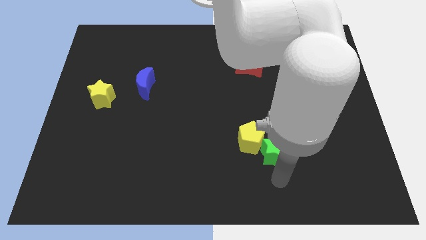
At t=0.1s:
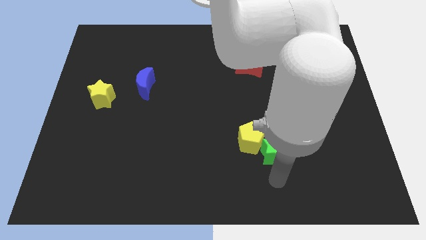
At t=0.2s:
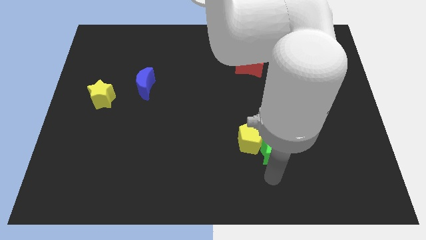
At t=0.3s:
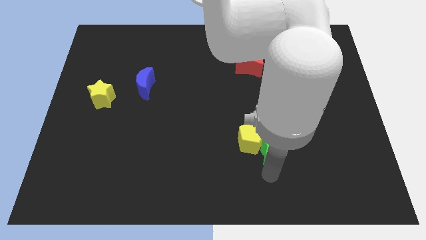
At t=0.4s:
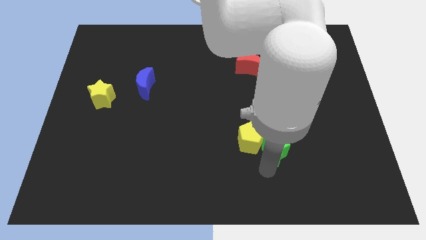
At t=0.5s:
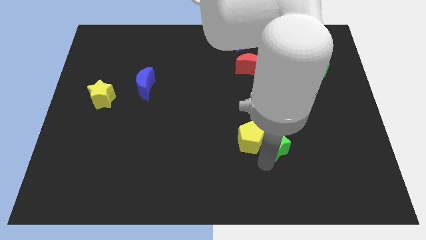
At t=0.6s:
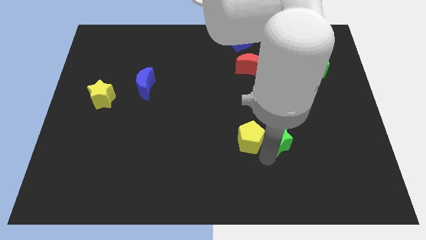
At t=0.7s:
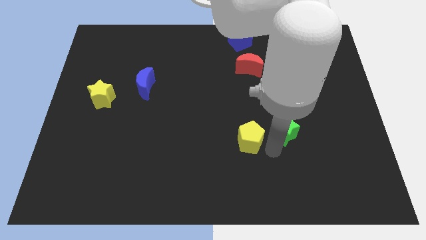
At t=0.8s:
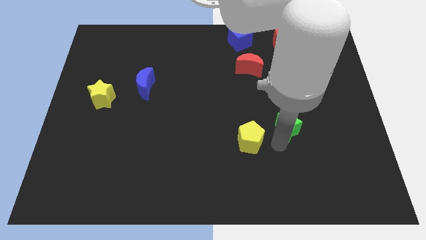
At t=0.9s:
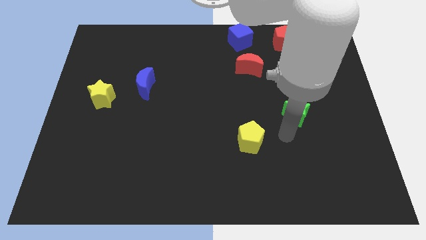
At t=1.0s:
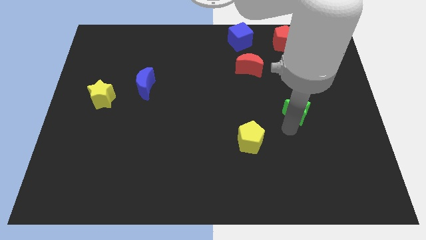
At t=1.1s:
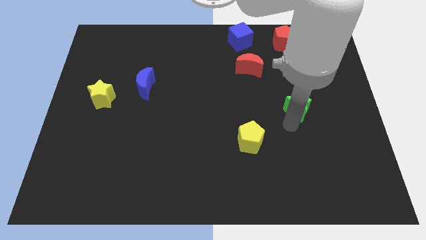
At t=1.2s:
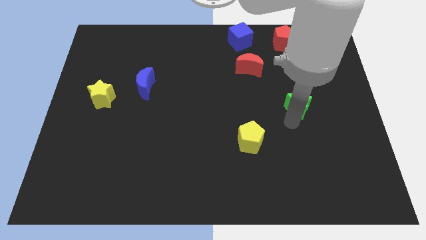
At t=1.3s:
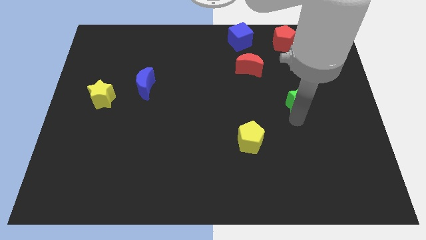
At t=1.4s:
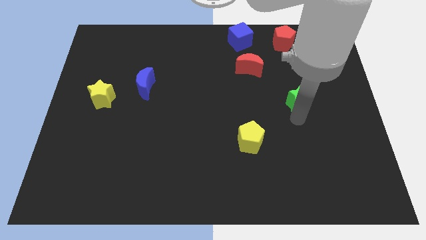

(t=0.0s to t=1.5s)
separate the green star from yellow pentagon

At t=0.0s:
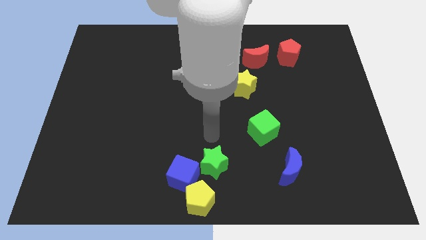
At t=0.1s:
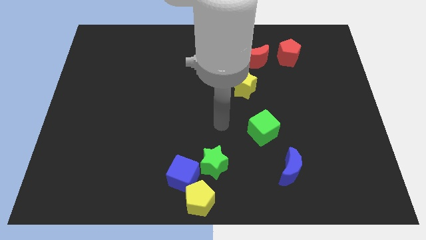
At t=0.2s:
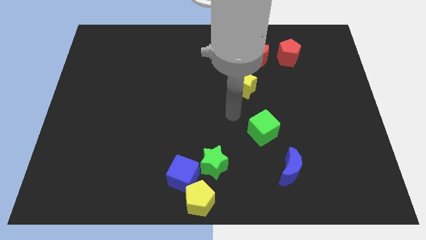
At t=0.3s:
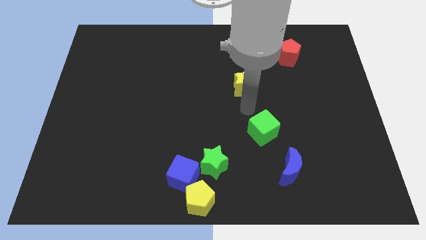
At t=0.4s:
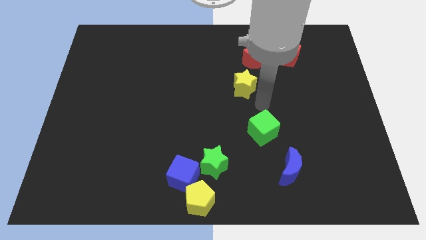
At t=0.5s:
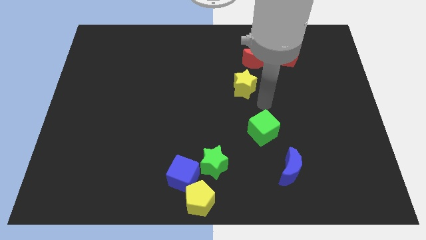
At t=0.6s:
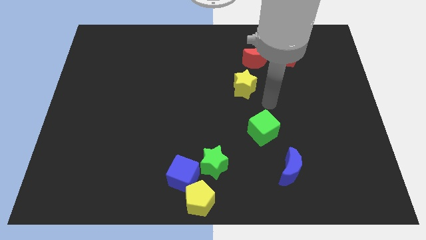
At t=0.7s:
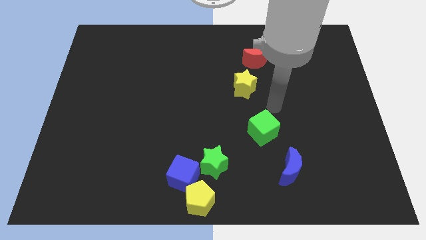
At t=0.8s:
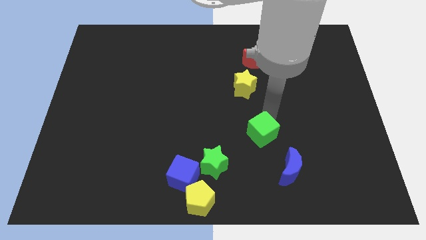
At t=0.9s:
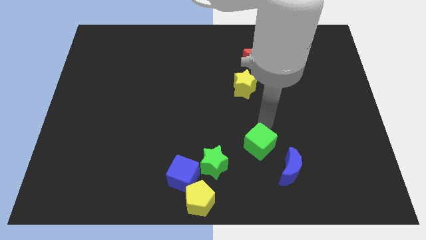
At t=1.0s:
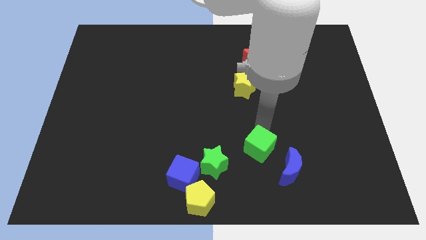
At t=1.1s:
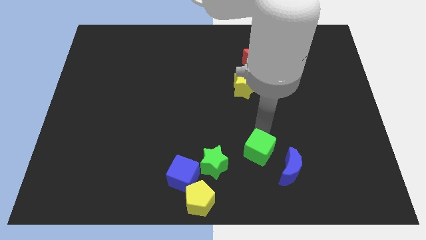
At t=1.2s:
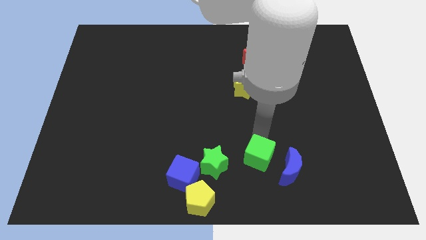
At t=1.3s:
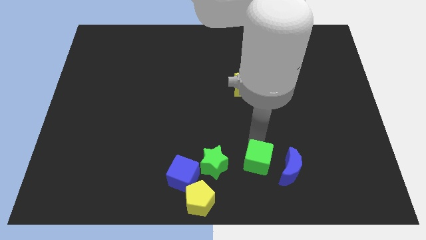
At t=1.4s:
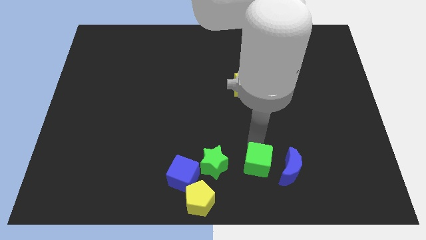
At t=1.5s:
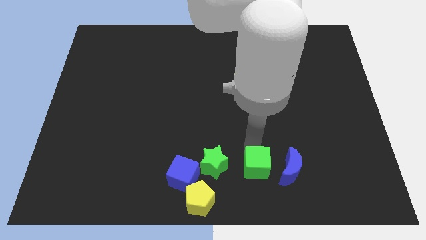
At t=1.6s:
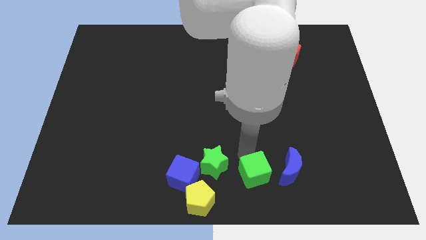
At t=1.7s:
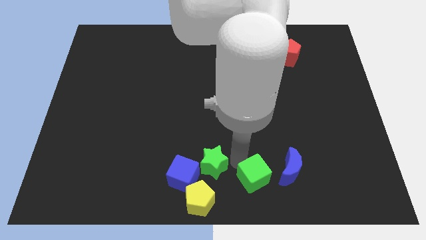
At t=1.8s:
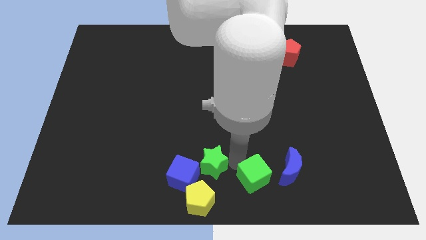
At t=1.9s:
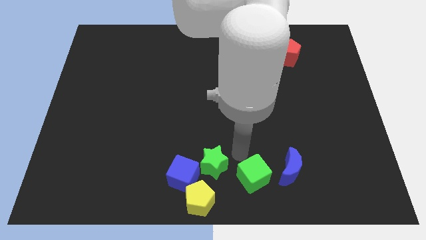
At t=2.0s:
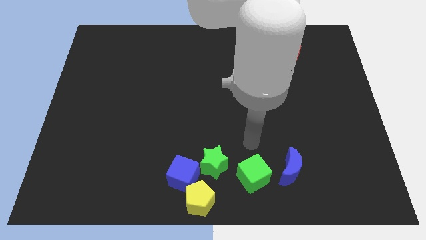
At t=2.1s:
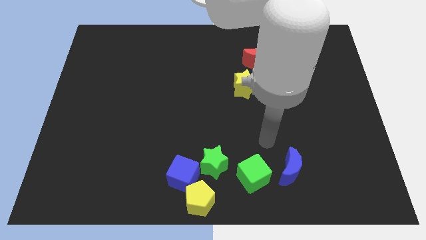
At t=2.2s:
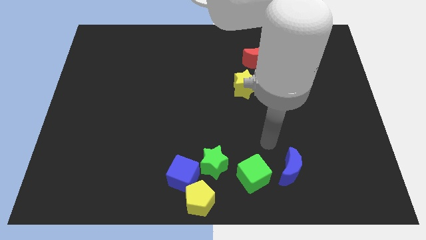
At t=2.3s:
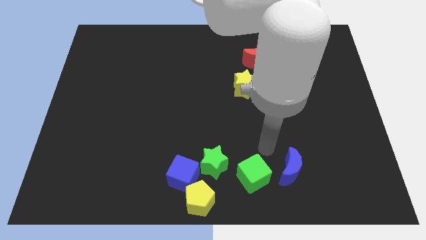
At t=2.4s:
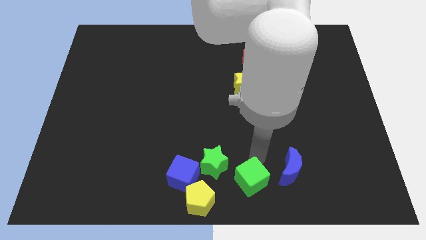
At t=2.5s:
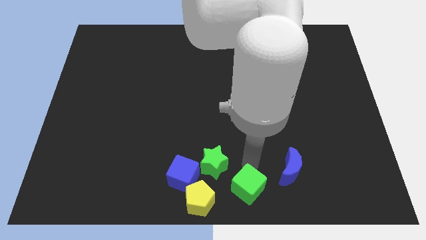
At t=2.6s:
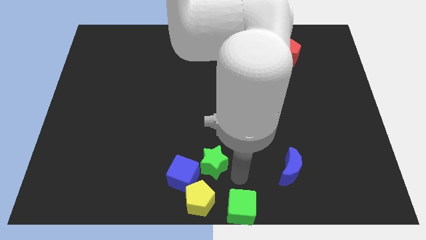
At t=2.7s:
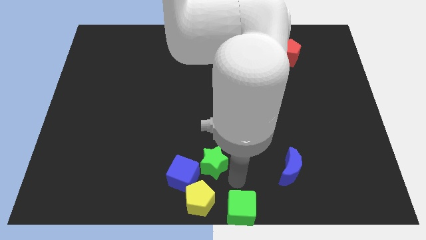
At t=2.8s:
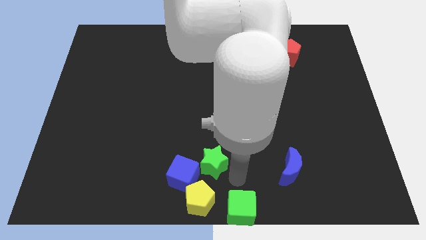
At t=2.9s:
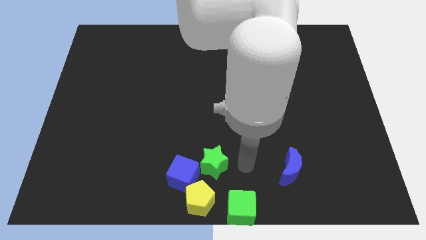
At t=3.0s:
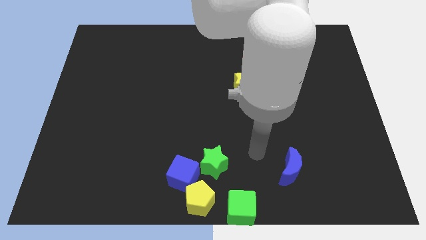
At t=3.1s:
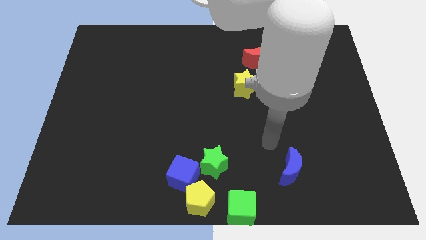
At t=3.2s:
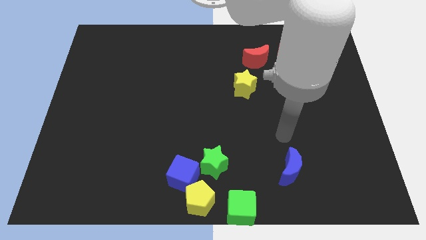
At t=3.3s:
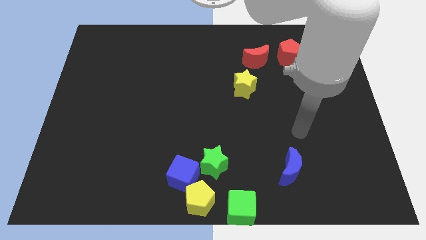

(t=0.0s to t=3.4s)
place the green cube right to the yellow pentagon

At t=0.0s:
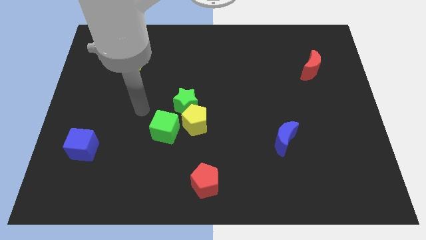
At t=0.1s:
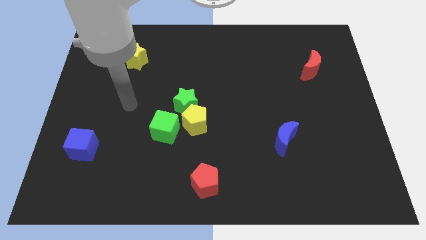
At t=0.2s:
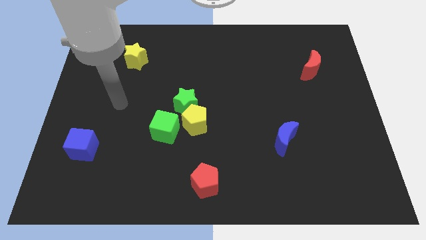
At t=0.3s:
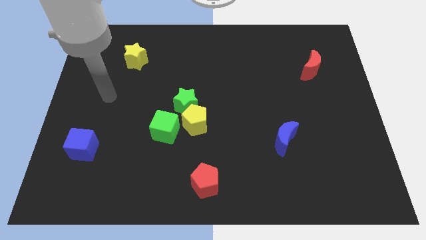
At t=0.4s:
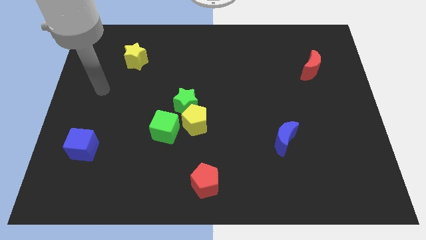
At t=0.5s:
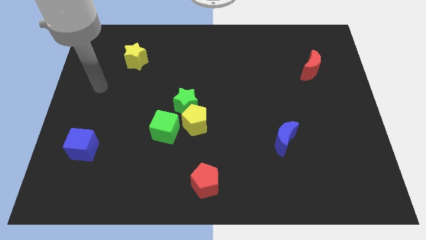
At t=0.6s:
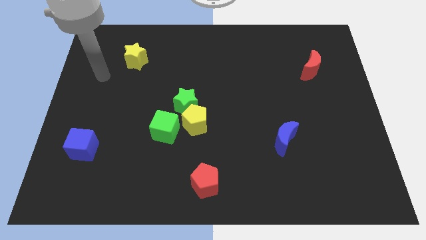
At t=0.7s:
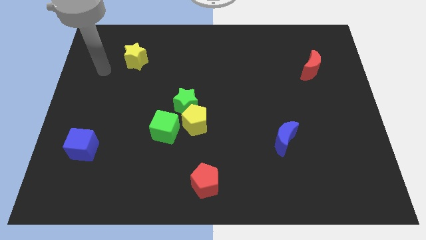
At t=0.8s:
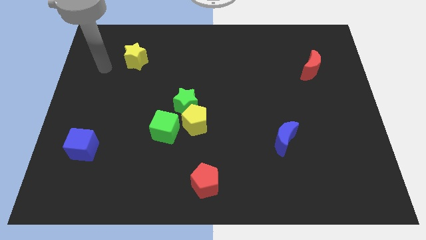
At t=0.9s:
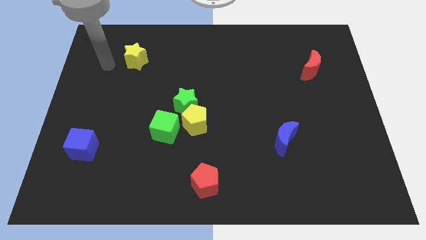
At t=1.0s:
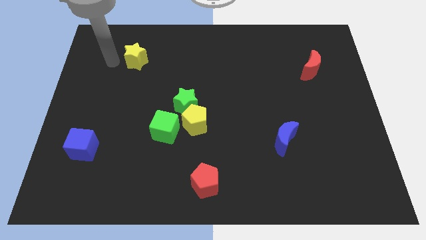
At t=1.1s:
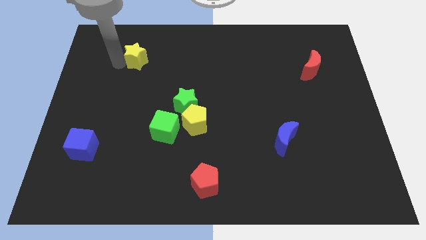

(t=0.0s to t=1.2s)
move arm to the left of yellow star

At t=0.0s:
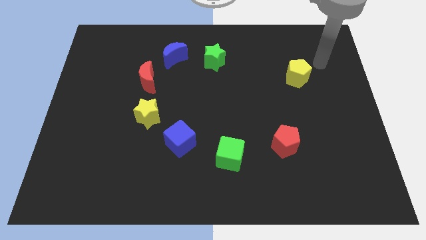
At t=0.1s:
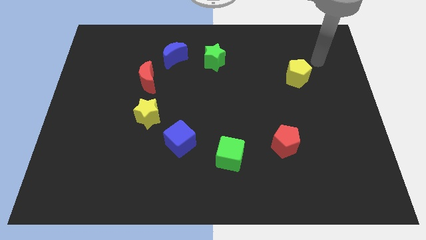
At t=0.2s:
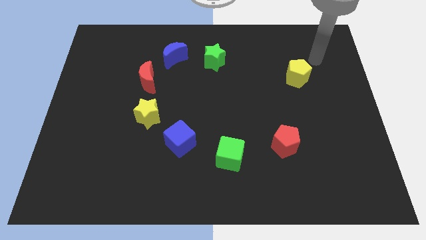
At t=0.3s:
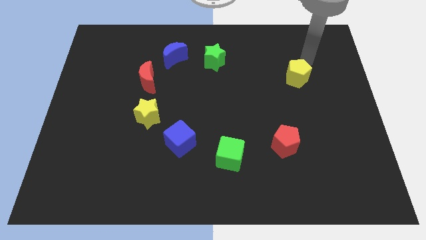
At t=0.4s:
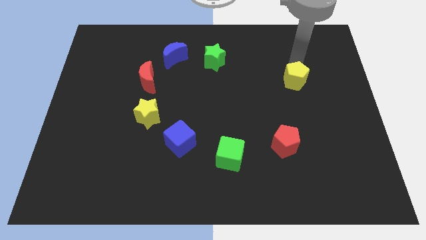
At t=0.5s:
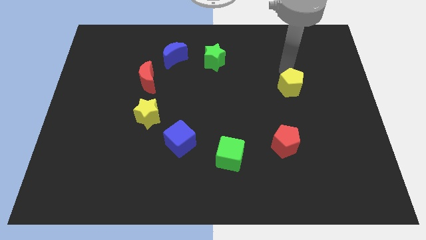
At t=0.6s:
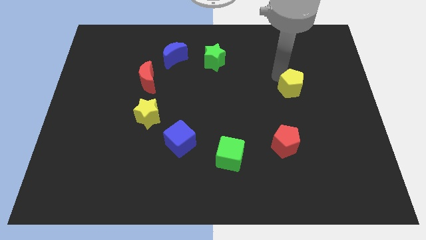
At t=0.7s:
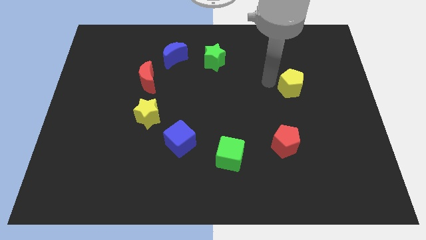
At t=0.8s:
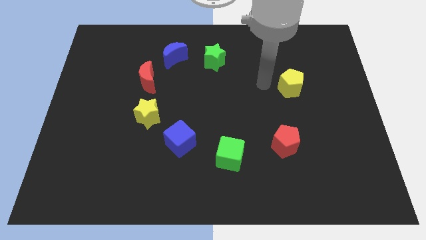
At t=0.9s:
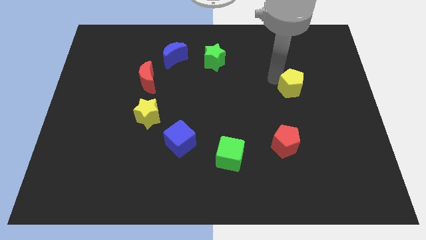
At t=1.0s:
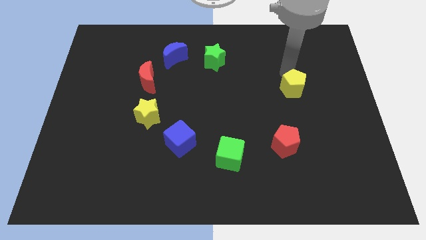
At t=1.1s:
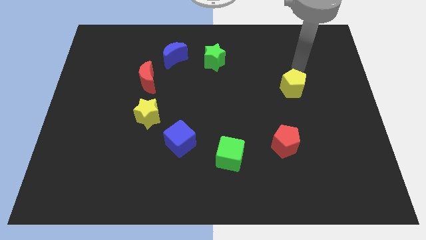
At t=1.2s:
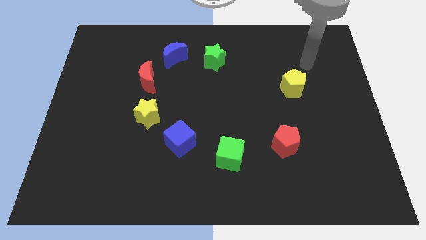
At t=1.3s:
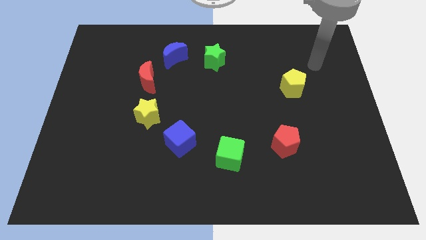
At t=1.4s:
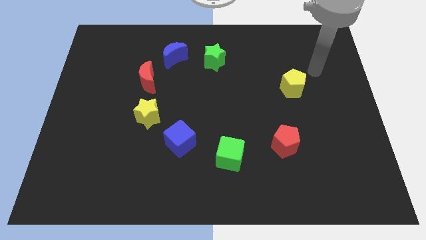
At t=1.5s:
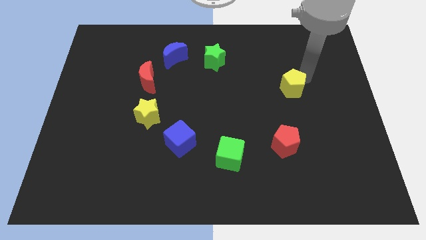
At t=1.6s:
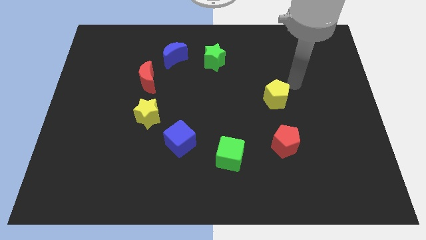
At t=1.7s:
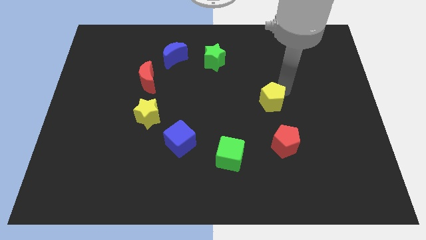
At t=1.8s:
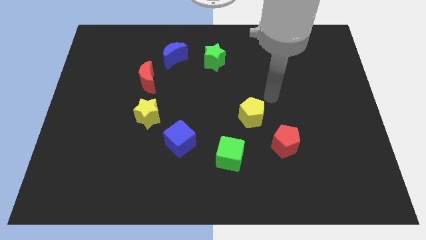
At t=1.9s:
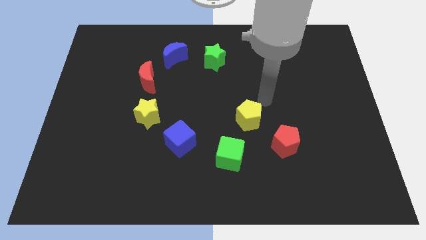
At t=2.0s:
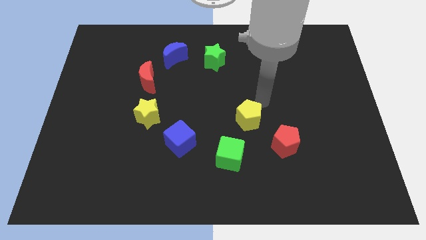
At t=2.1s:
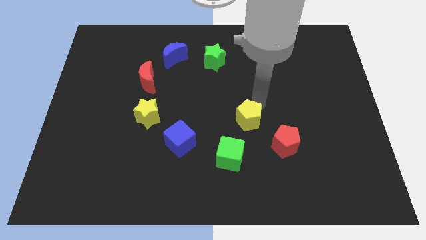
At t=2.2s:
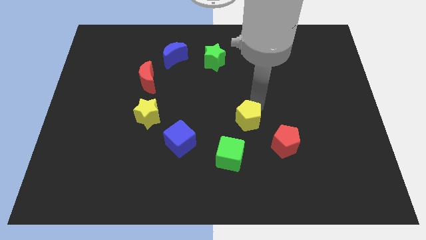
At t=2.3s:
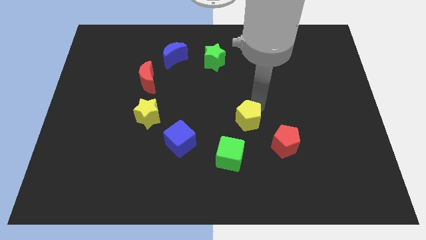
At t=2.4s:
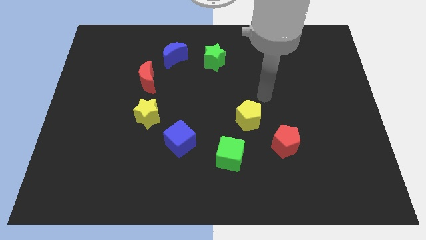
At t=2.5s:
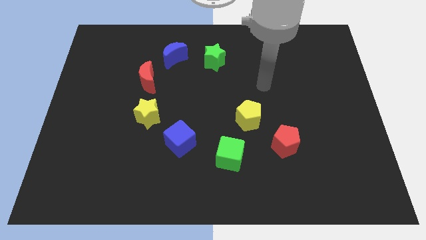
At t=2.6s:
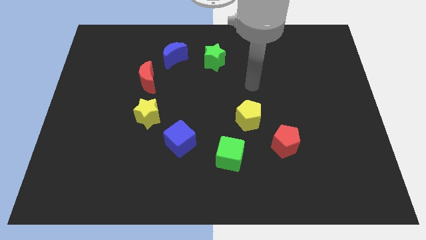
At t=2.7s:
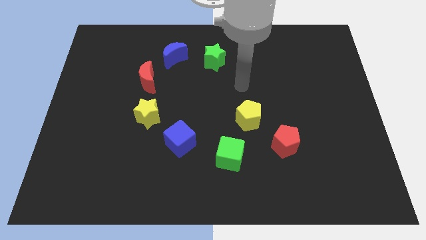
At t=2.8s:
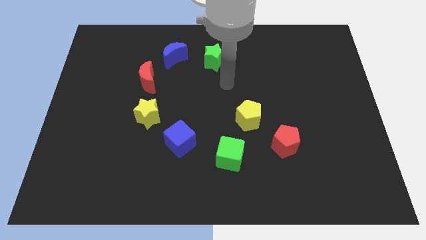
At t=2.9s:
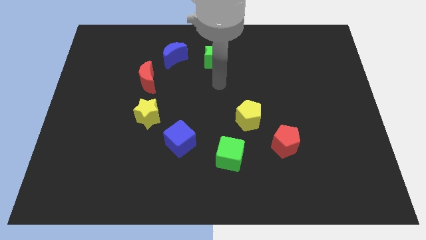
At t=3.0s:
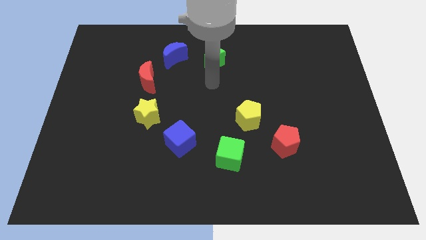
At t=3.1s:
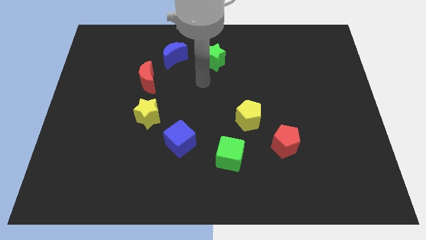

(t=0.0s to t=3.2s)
make a triangle by placing yellow pentagon
